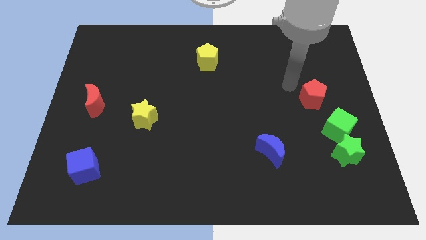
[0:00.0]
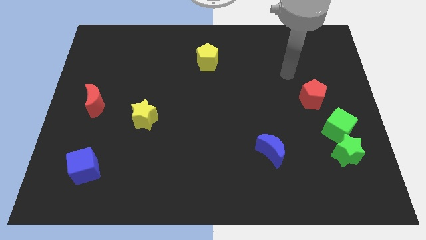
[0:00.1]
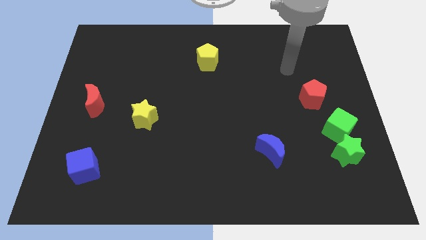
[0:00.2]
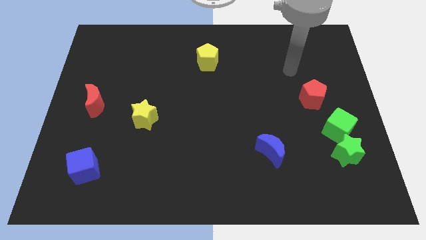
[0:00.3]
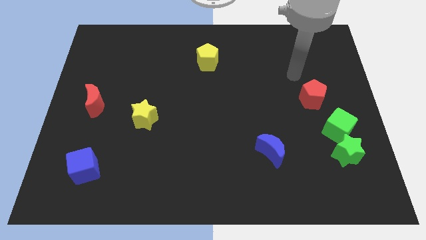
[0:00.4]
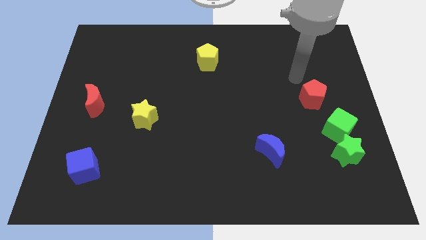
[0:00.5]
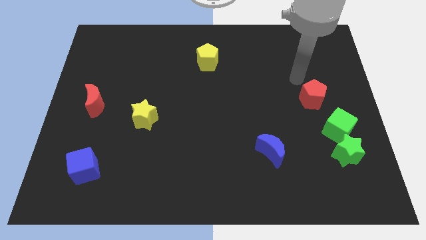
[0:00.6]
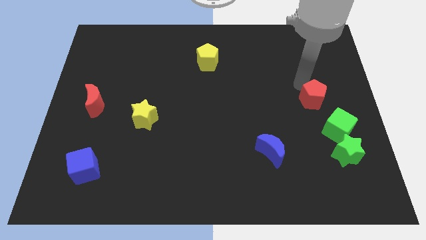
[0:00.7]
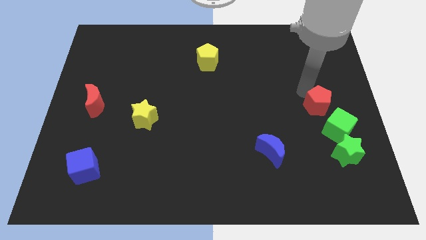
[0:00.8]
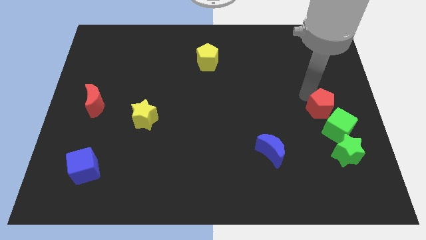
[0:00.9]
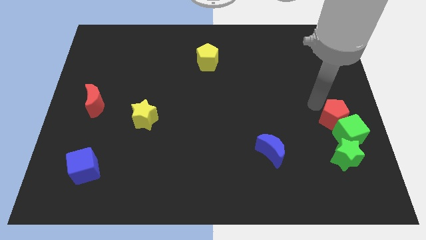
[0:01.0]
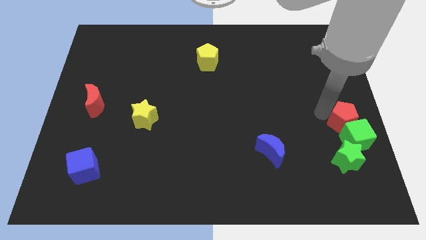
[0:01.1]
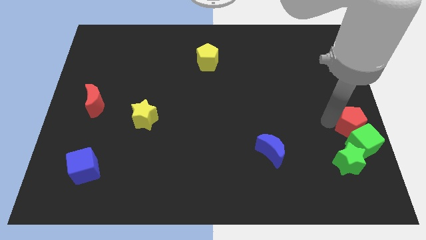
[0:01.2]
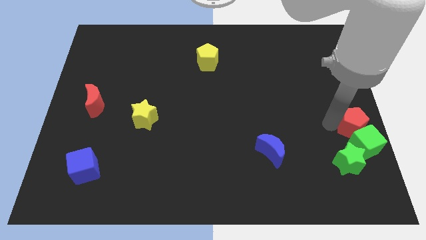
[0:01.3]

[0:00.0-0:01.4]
push the red pentagon into the green cube

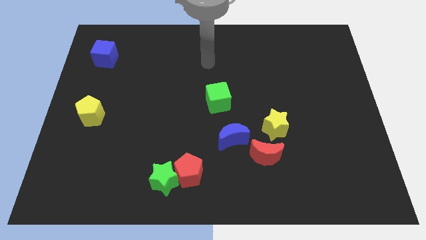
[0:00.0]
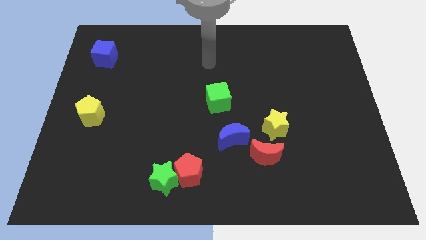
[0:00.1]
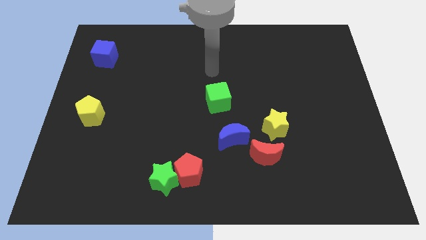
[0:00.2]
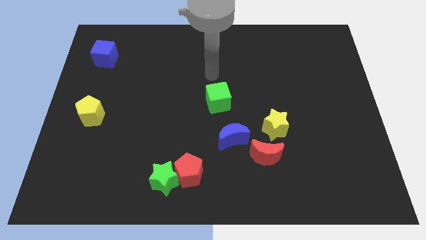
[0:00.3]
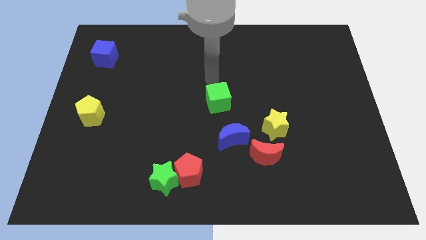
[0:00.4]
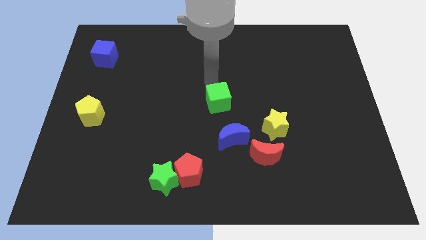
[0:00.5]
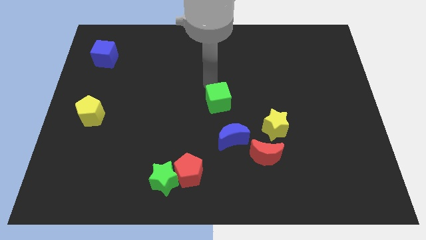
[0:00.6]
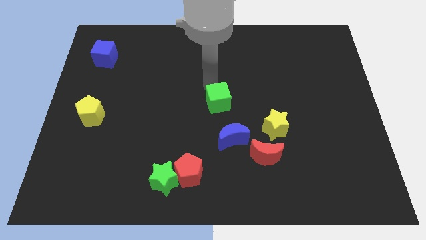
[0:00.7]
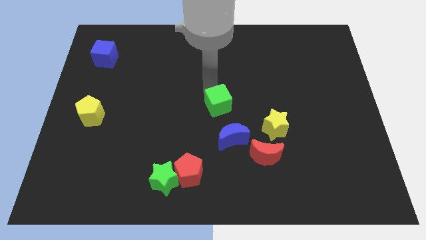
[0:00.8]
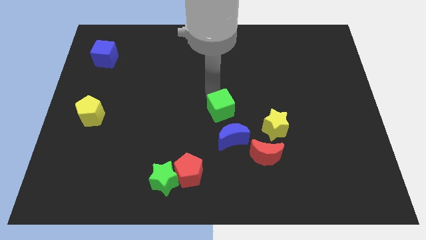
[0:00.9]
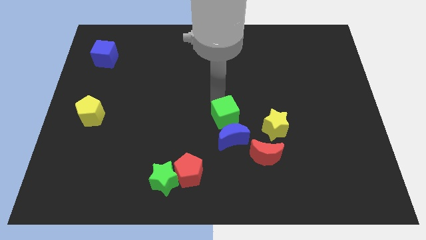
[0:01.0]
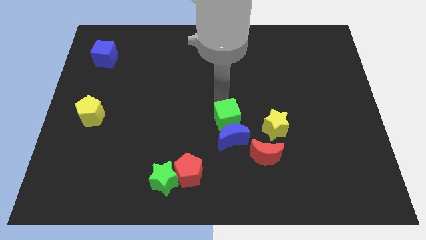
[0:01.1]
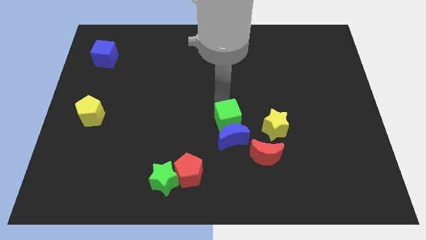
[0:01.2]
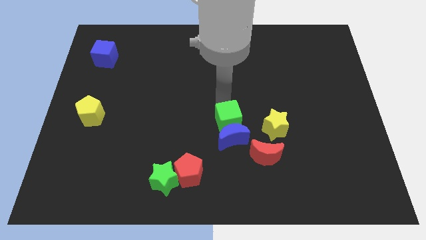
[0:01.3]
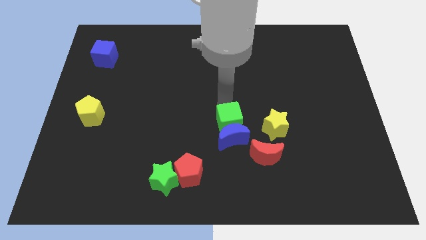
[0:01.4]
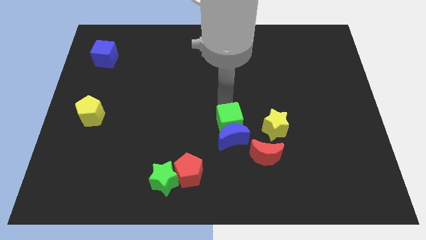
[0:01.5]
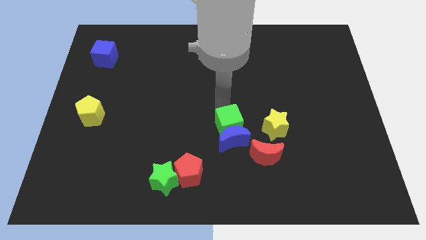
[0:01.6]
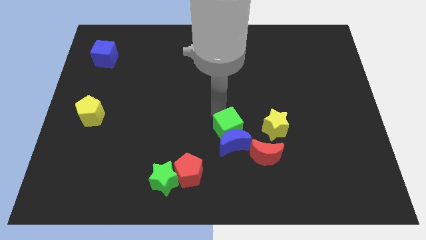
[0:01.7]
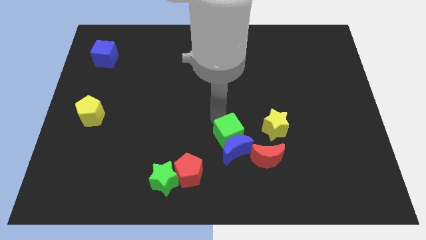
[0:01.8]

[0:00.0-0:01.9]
push the green cube into the blue moon on top

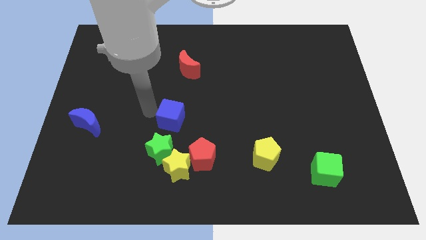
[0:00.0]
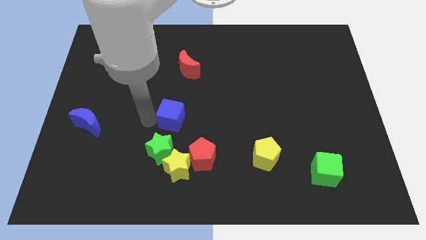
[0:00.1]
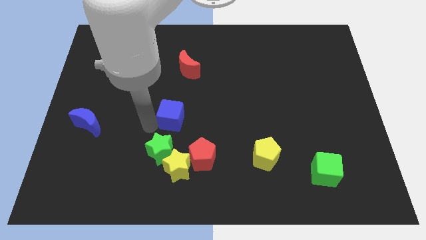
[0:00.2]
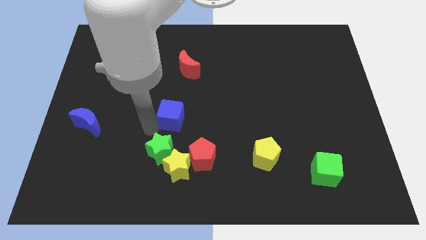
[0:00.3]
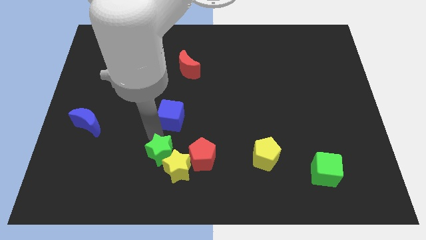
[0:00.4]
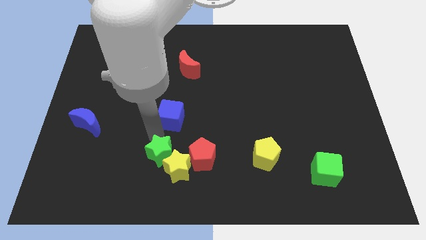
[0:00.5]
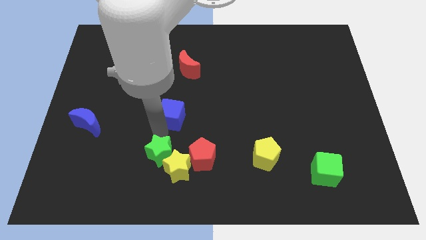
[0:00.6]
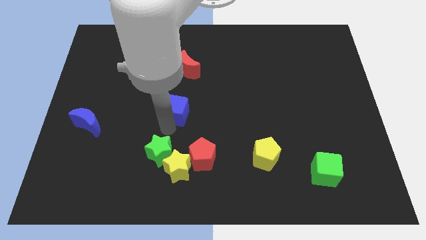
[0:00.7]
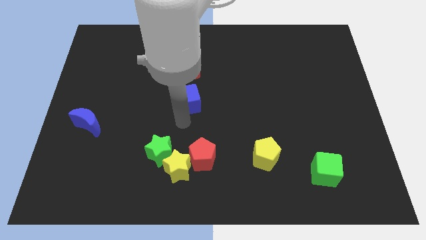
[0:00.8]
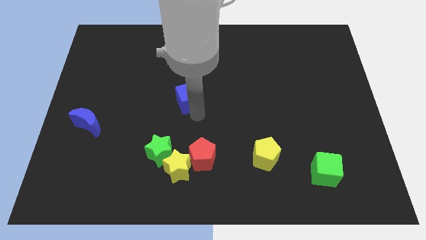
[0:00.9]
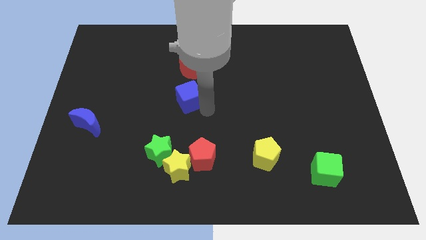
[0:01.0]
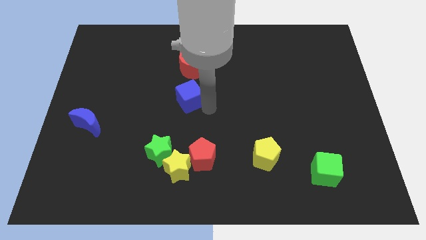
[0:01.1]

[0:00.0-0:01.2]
move blue cube below red moon

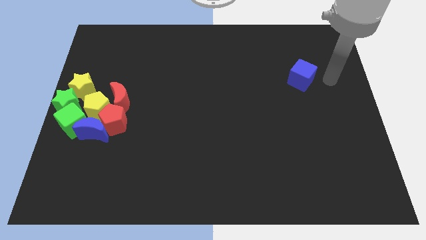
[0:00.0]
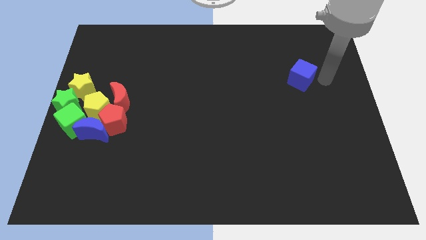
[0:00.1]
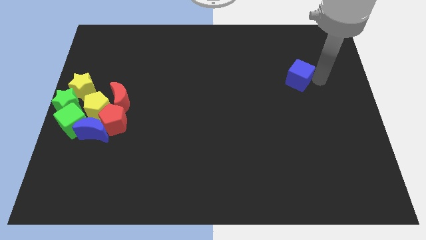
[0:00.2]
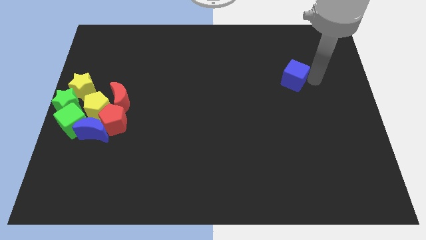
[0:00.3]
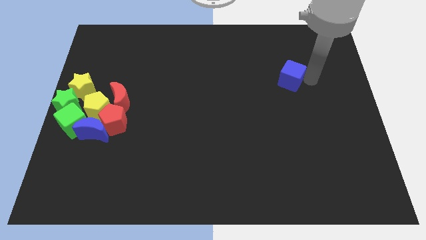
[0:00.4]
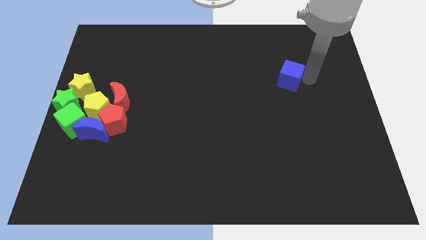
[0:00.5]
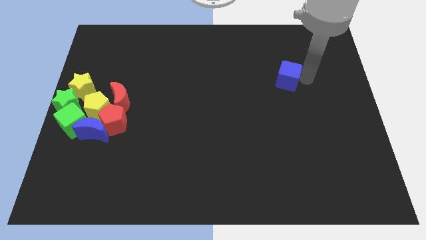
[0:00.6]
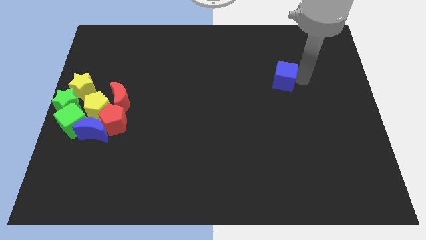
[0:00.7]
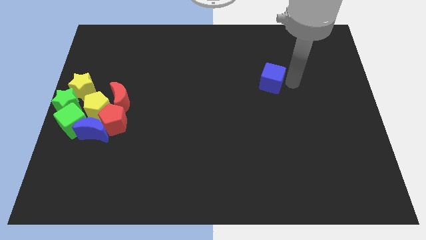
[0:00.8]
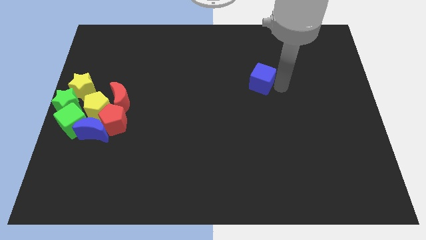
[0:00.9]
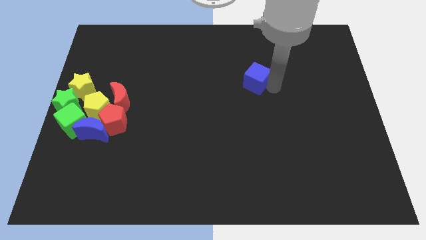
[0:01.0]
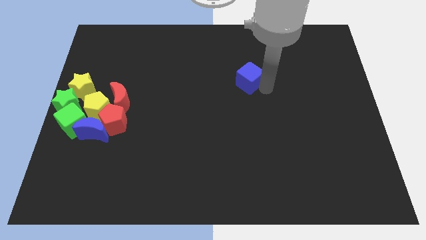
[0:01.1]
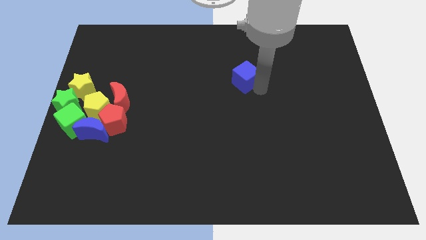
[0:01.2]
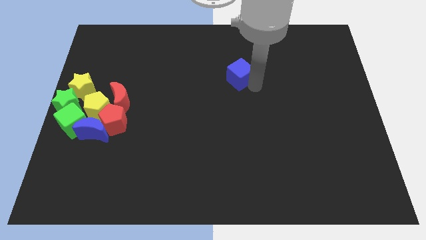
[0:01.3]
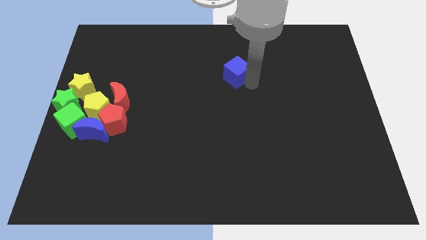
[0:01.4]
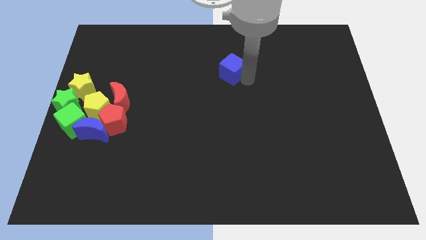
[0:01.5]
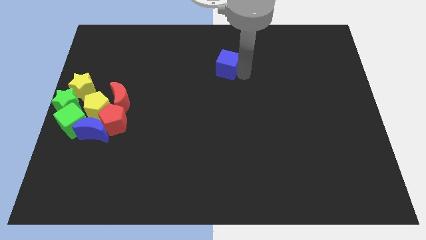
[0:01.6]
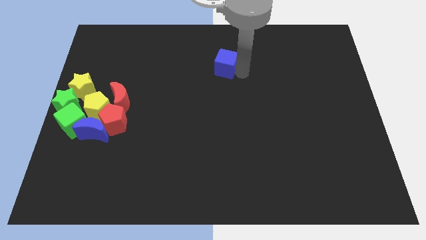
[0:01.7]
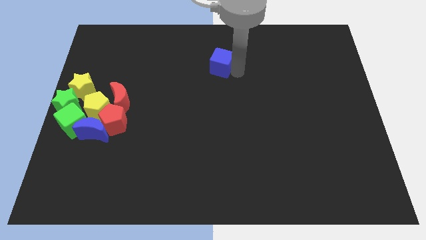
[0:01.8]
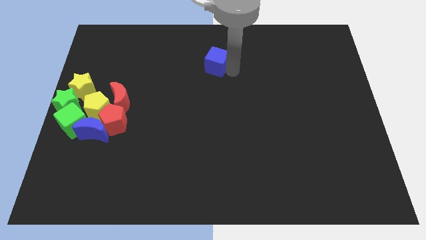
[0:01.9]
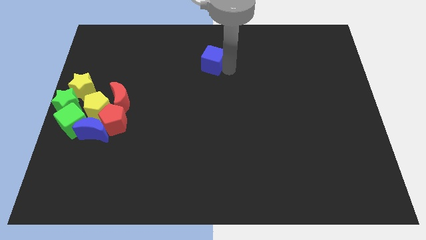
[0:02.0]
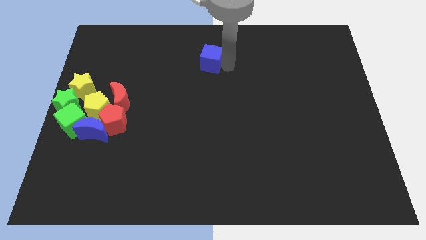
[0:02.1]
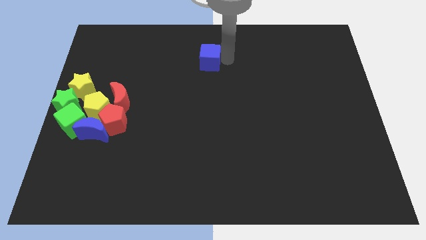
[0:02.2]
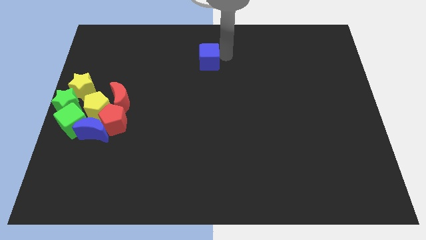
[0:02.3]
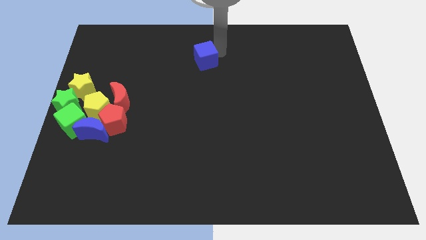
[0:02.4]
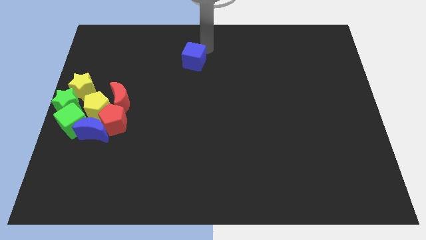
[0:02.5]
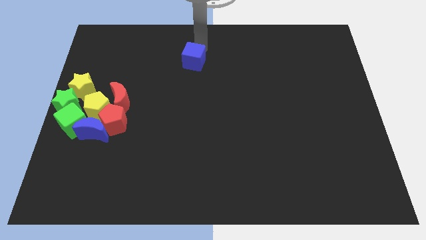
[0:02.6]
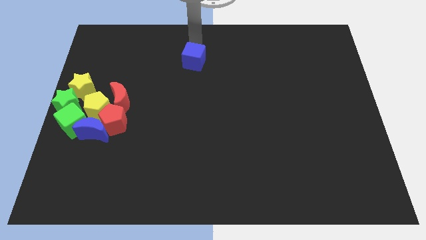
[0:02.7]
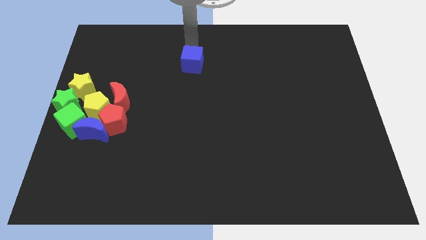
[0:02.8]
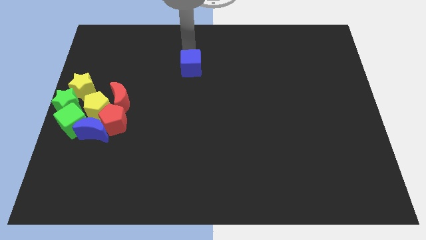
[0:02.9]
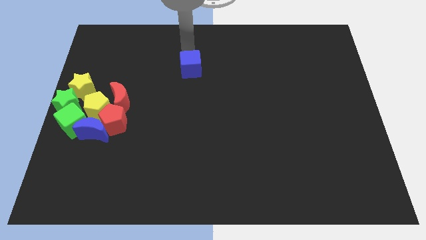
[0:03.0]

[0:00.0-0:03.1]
move the blue cube to the left

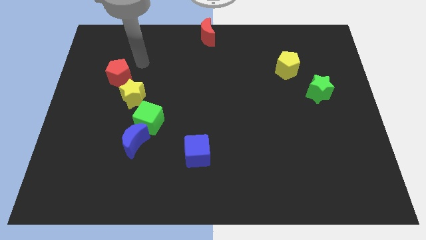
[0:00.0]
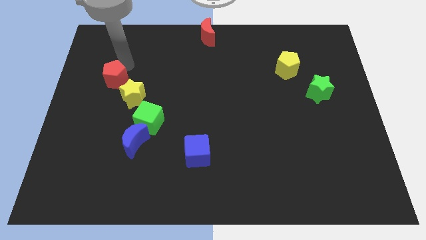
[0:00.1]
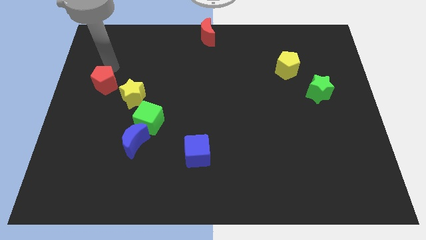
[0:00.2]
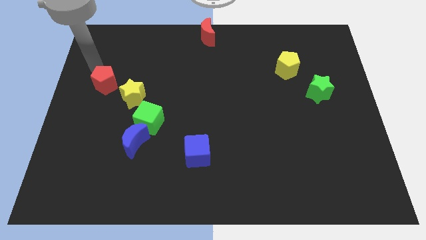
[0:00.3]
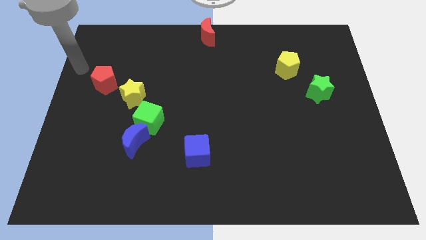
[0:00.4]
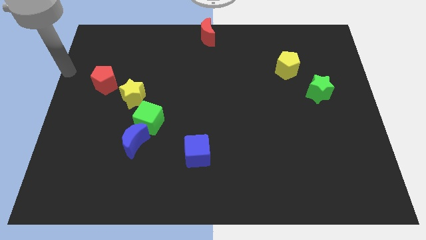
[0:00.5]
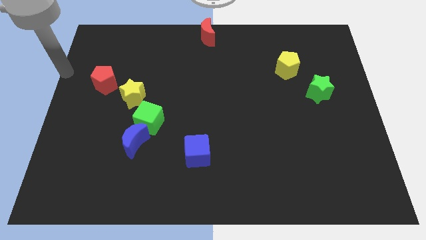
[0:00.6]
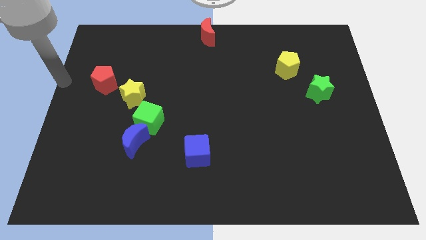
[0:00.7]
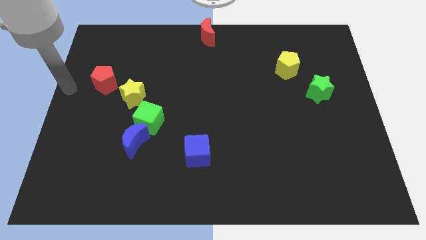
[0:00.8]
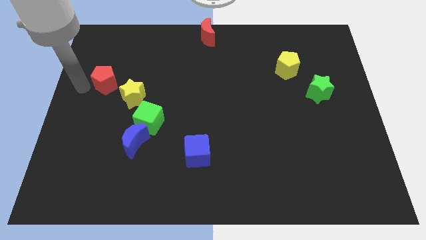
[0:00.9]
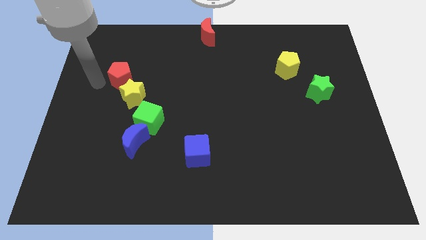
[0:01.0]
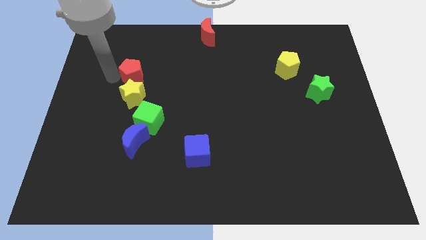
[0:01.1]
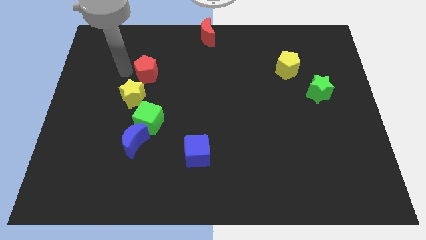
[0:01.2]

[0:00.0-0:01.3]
move red pentagon above yellow star
